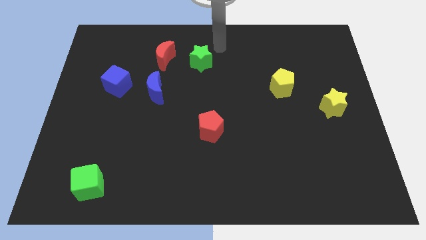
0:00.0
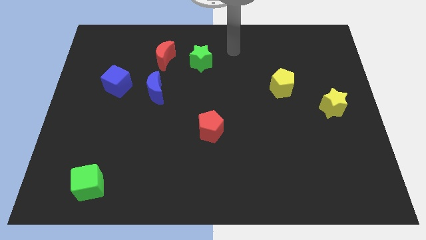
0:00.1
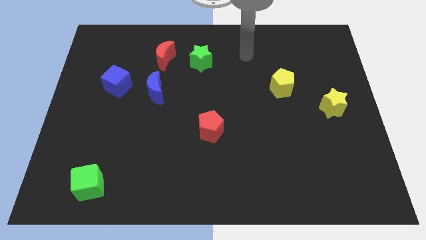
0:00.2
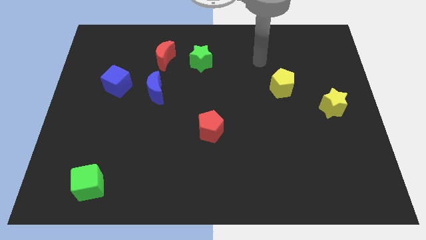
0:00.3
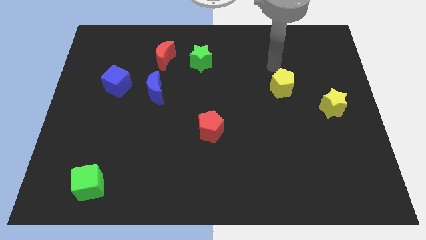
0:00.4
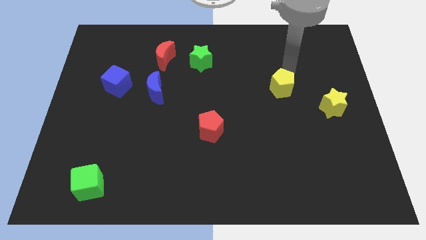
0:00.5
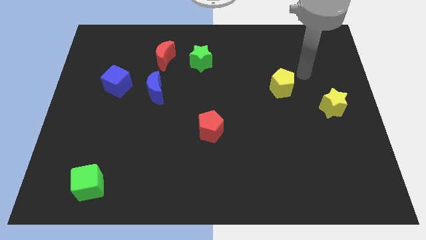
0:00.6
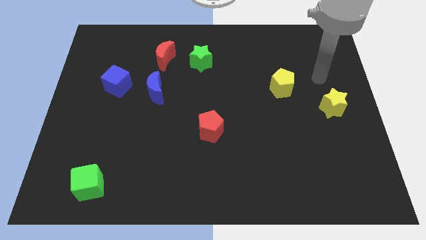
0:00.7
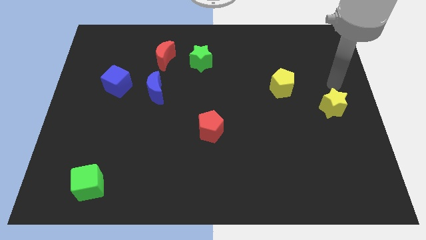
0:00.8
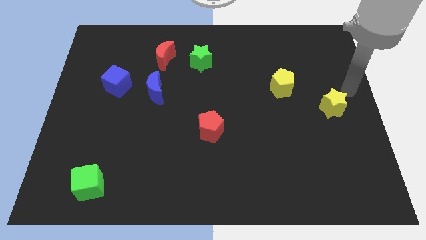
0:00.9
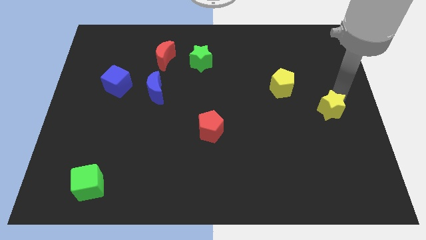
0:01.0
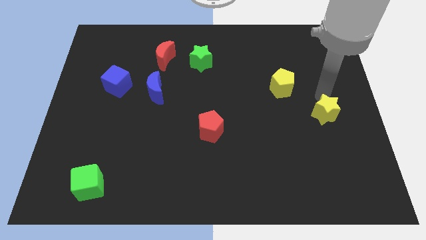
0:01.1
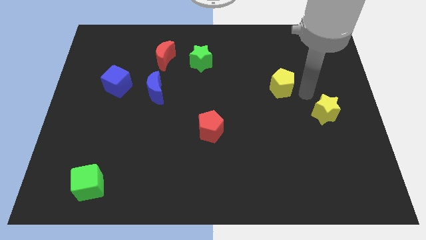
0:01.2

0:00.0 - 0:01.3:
push the yellow star slightly to the bottom side

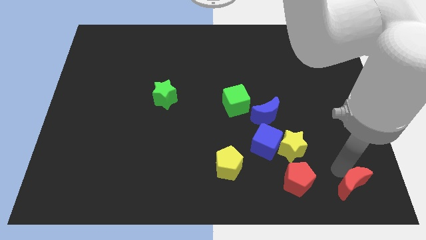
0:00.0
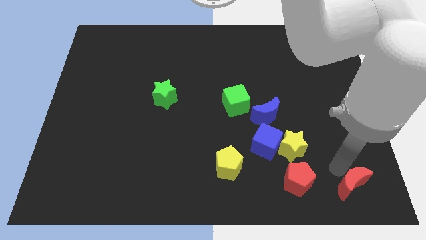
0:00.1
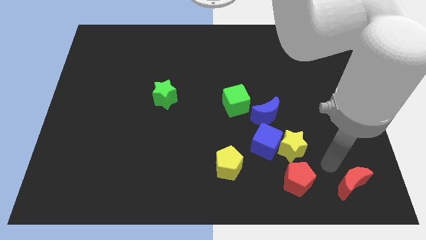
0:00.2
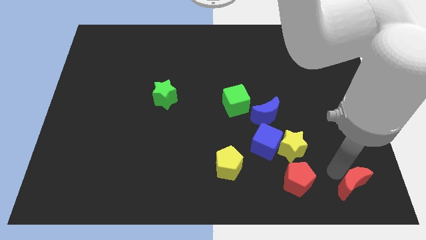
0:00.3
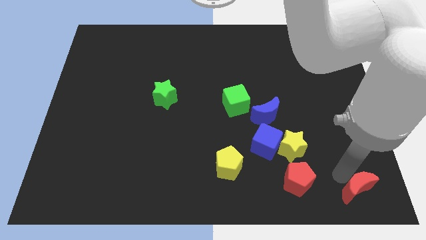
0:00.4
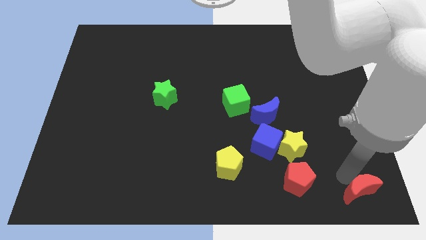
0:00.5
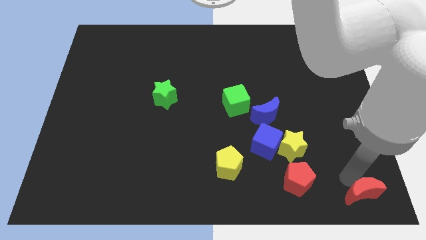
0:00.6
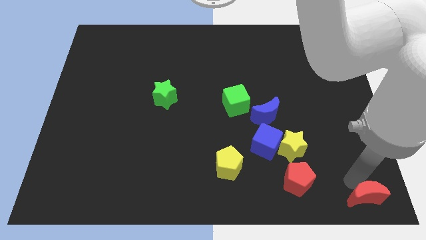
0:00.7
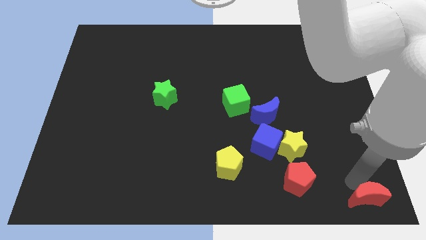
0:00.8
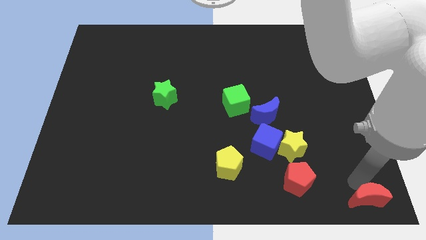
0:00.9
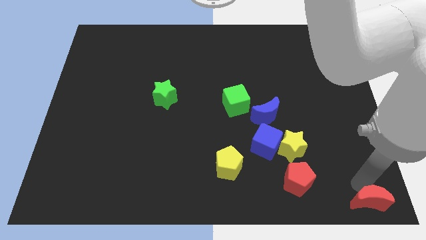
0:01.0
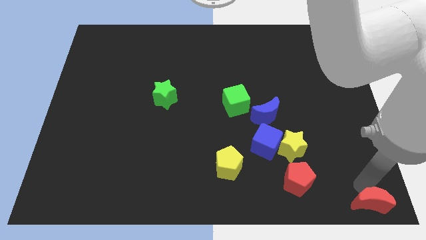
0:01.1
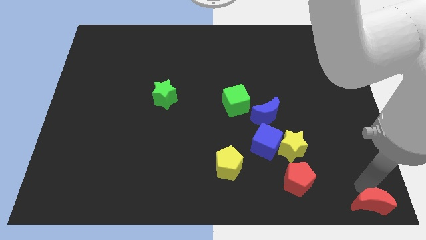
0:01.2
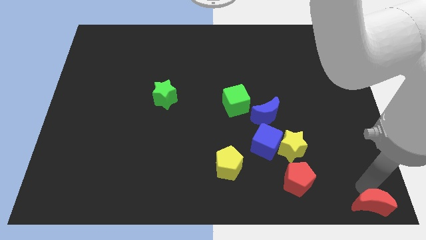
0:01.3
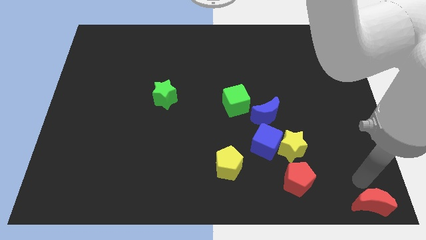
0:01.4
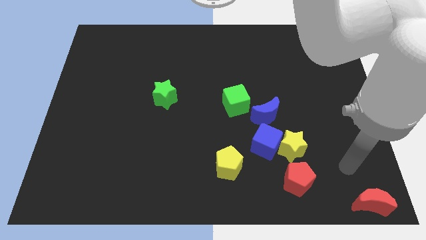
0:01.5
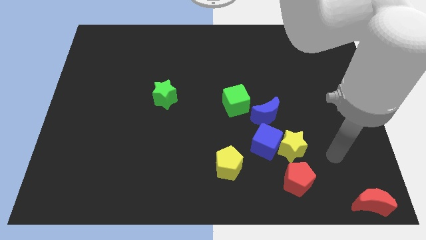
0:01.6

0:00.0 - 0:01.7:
move the red moon towards the bottom right

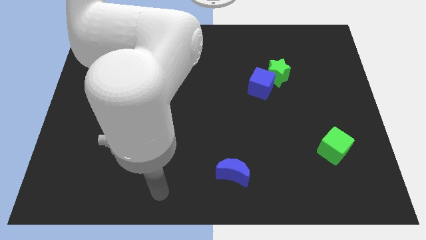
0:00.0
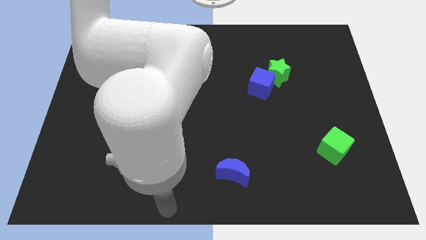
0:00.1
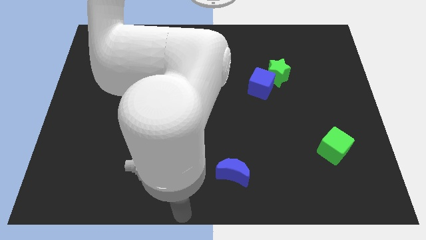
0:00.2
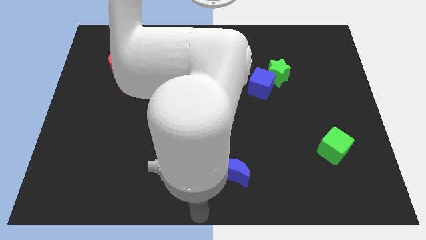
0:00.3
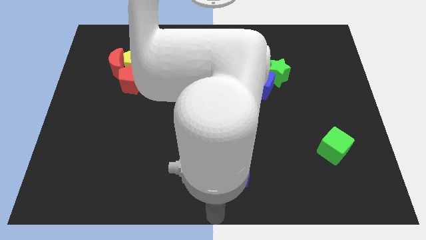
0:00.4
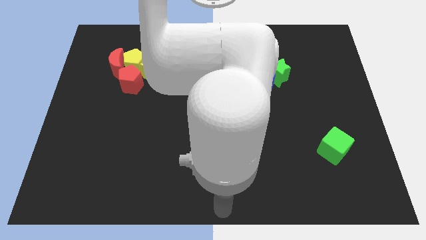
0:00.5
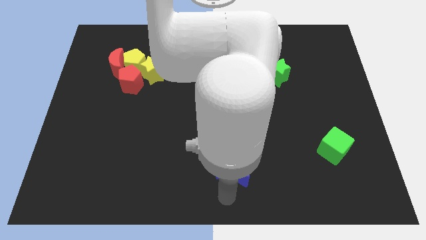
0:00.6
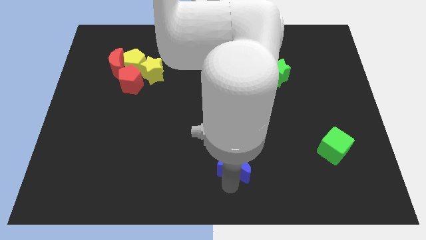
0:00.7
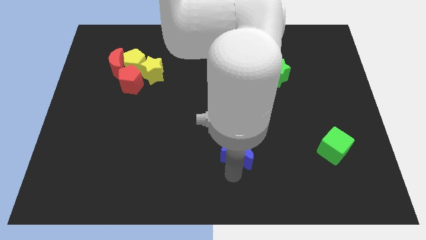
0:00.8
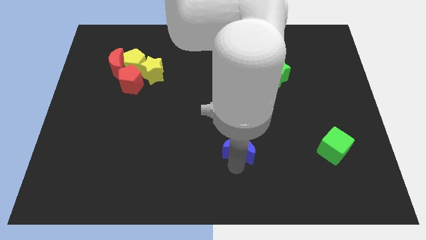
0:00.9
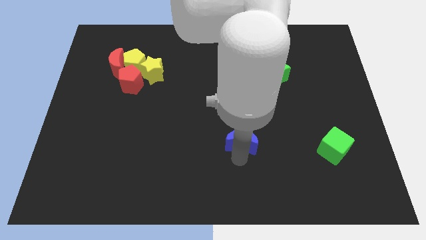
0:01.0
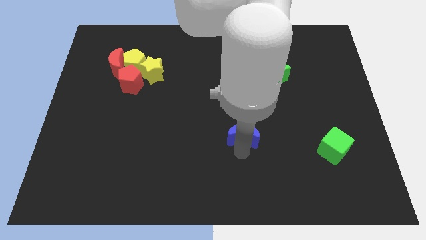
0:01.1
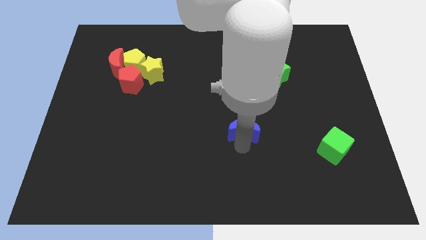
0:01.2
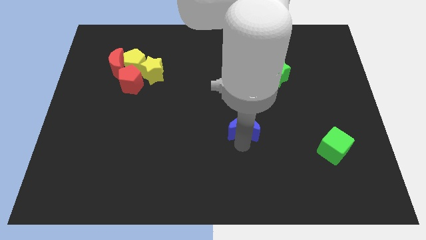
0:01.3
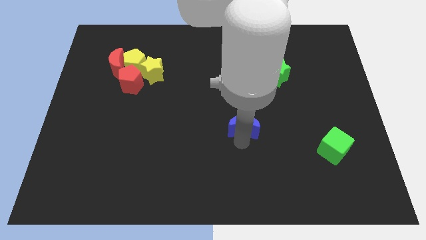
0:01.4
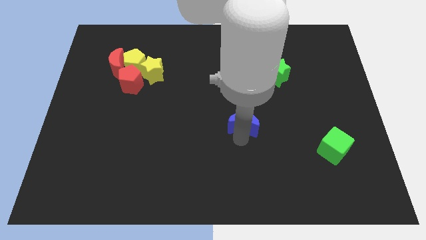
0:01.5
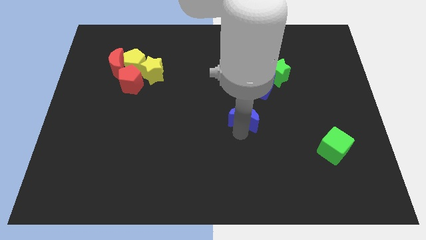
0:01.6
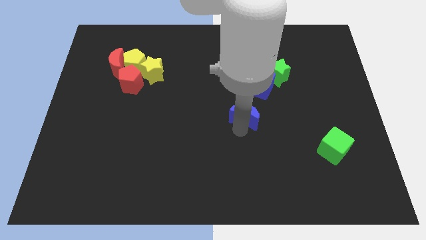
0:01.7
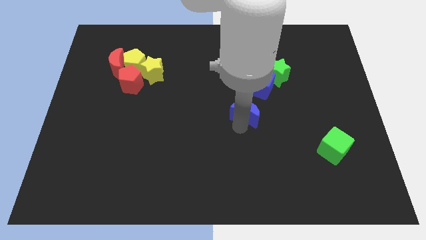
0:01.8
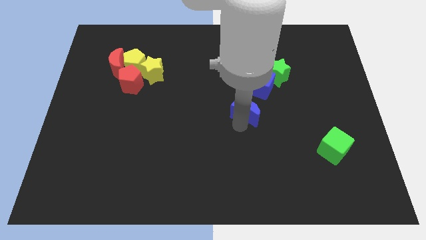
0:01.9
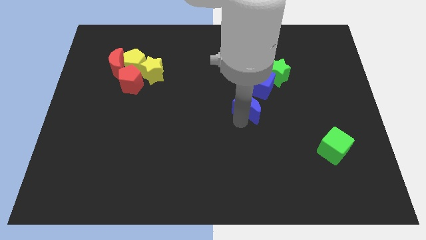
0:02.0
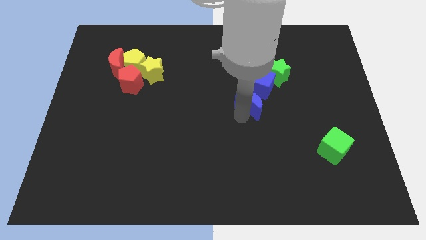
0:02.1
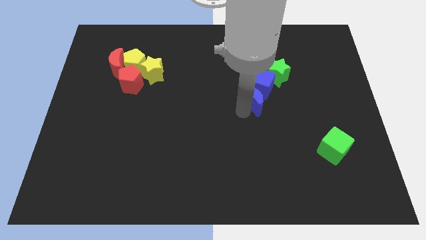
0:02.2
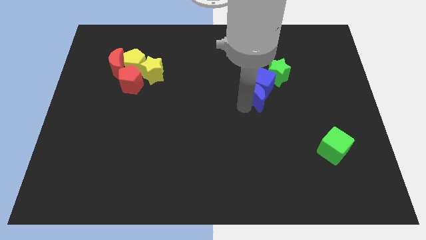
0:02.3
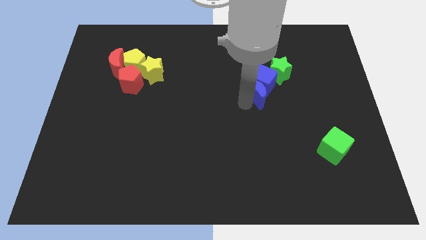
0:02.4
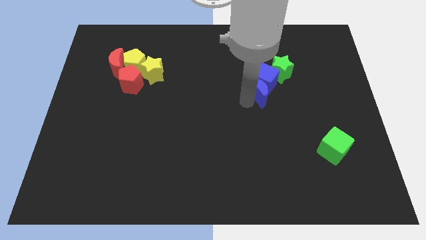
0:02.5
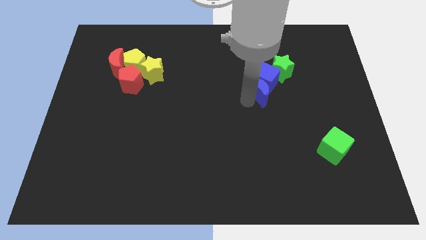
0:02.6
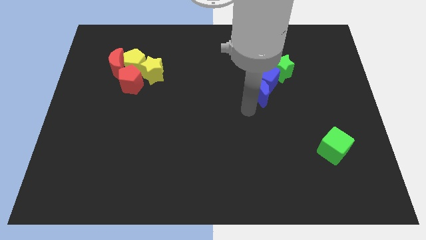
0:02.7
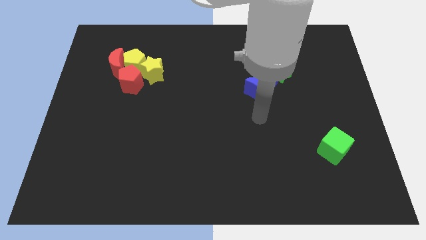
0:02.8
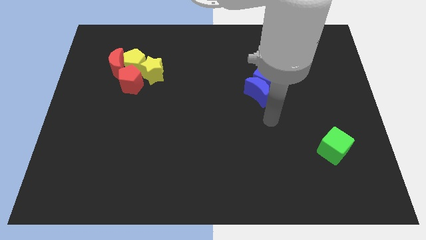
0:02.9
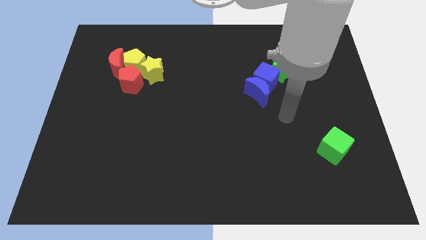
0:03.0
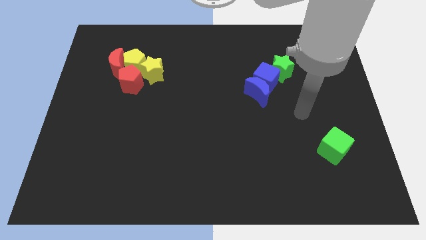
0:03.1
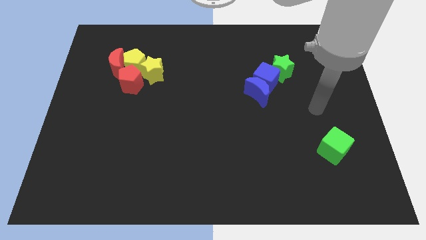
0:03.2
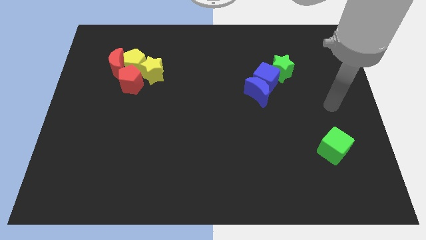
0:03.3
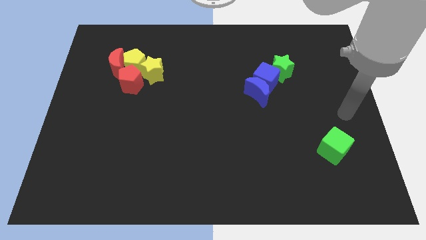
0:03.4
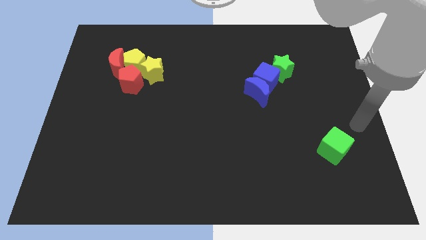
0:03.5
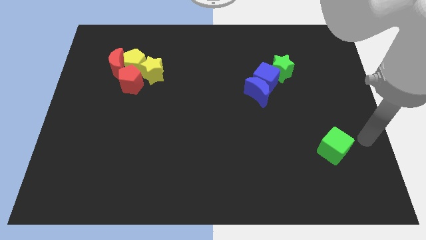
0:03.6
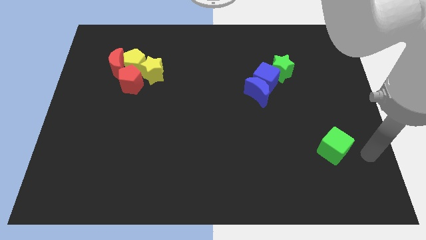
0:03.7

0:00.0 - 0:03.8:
move the blue moon into blue cube

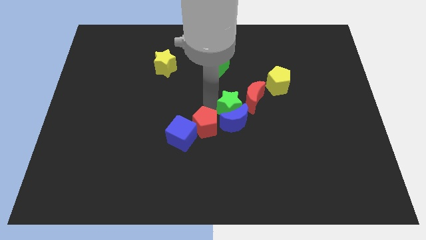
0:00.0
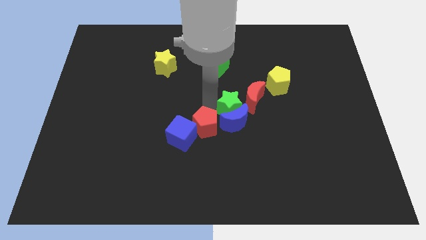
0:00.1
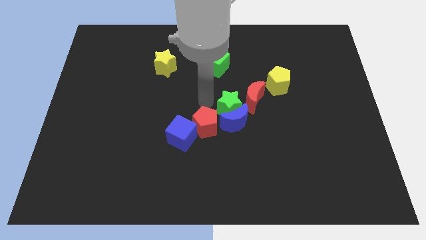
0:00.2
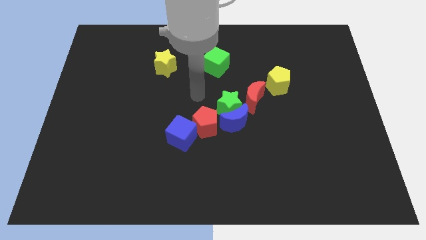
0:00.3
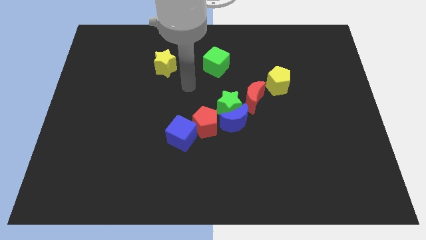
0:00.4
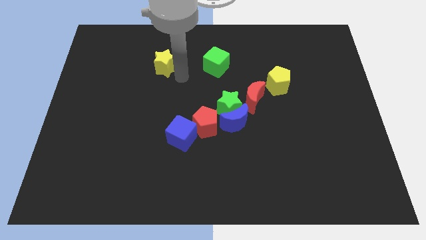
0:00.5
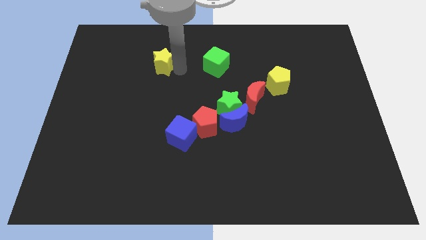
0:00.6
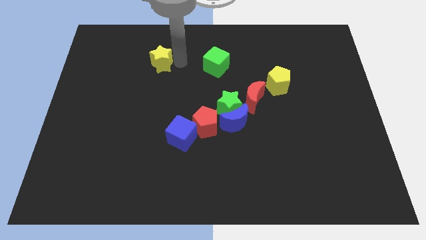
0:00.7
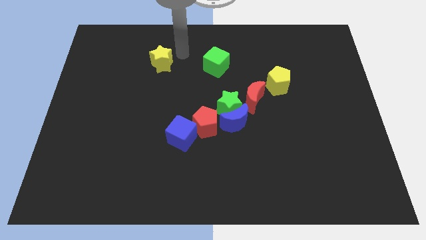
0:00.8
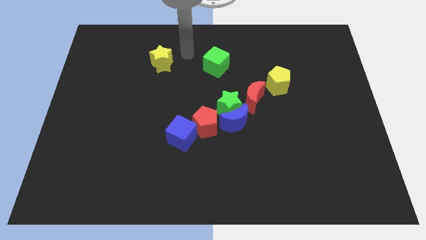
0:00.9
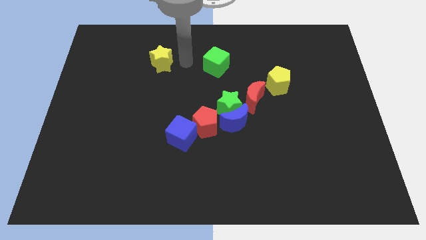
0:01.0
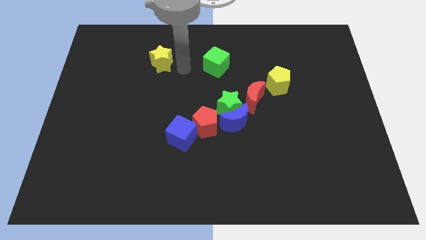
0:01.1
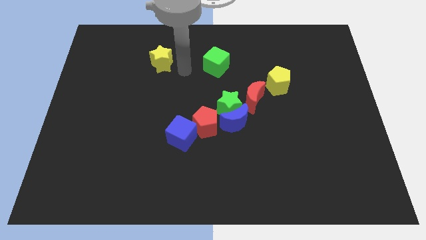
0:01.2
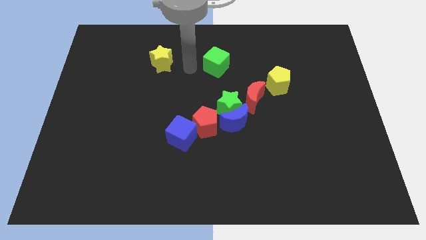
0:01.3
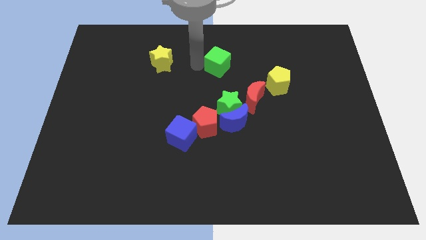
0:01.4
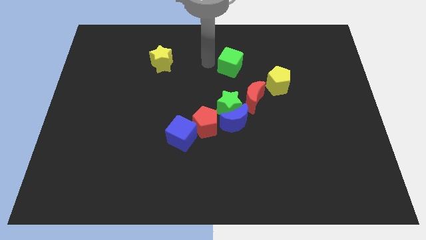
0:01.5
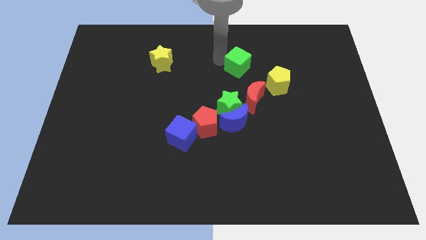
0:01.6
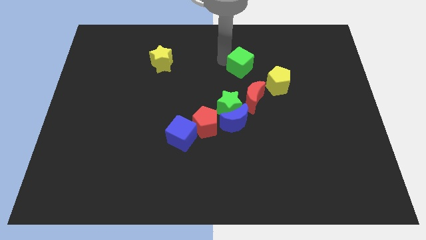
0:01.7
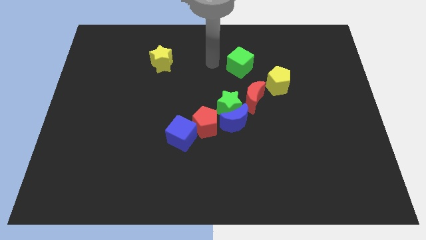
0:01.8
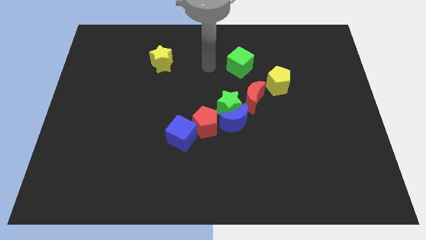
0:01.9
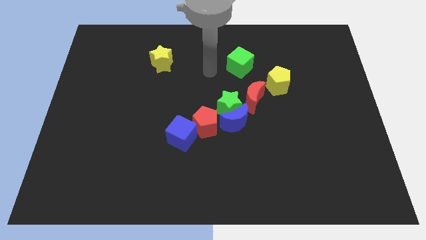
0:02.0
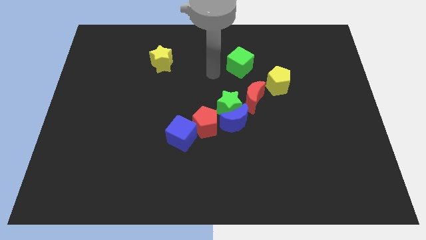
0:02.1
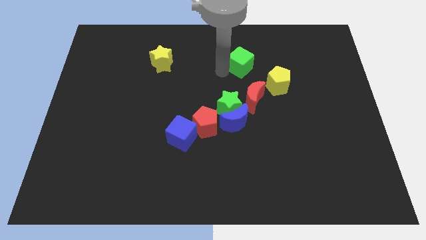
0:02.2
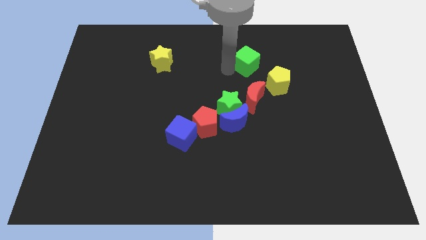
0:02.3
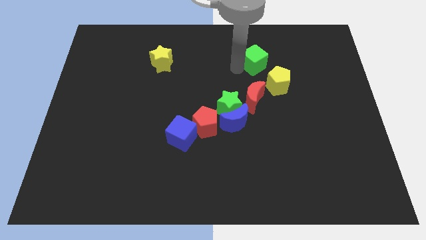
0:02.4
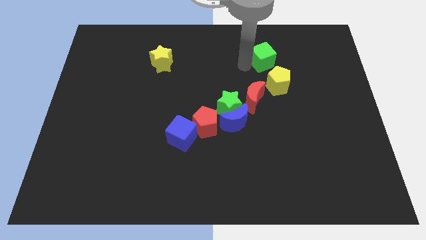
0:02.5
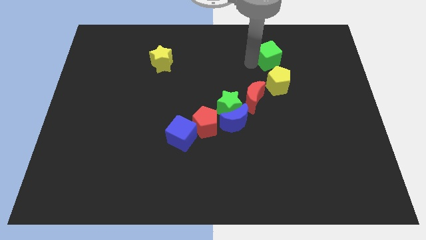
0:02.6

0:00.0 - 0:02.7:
push the yellow star and green cube in different directions
